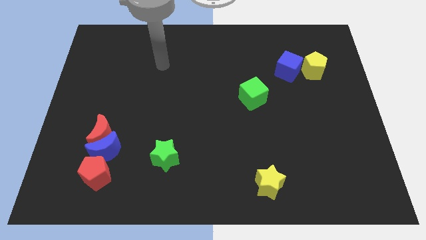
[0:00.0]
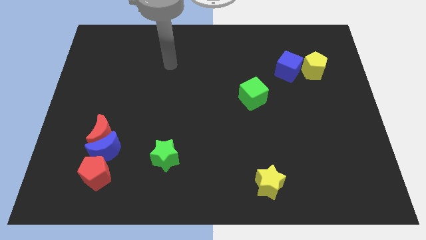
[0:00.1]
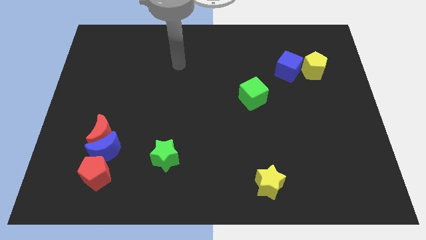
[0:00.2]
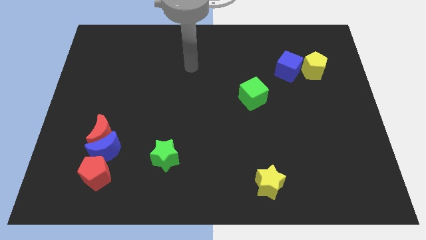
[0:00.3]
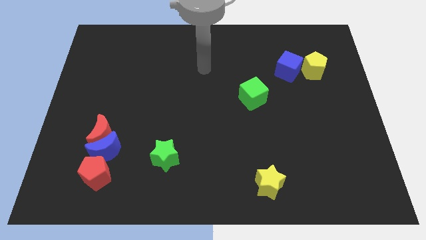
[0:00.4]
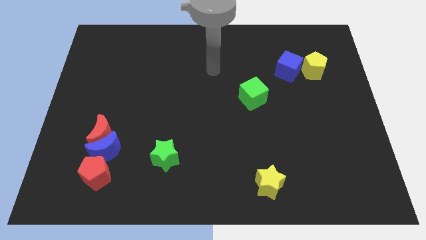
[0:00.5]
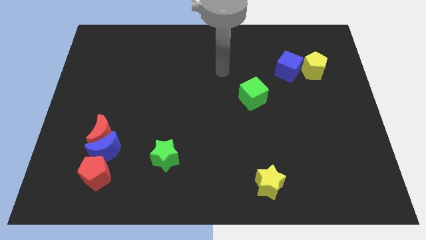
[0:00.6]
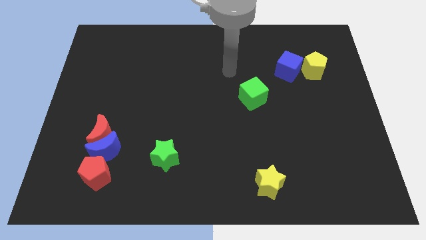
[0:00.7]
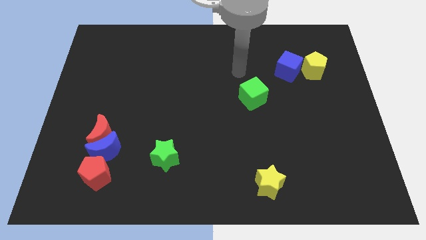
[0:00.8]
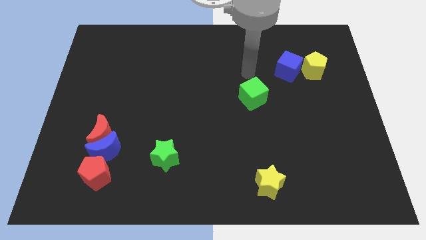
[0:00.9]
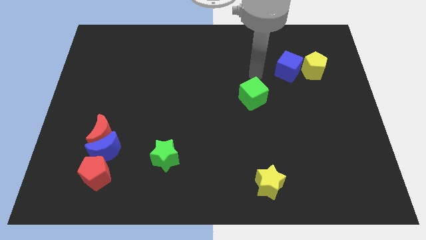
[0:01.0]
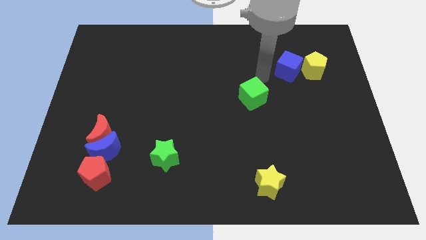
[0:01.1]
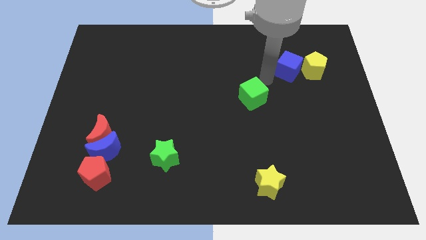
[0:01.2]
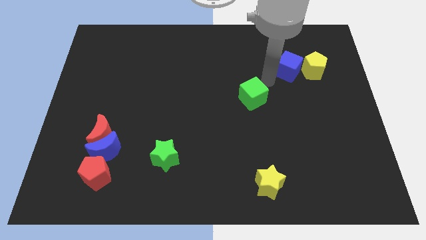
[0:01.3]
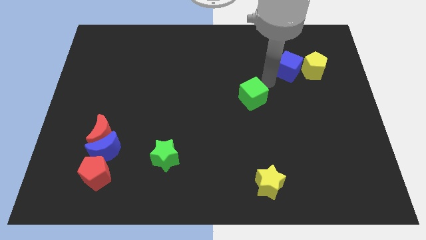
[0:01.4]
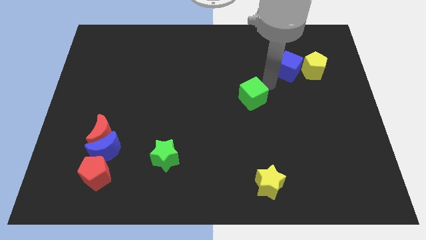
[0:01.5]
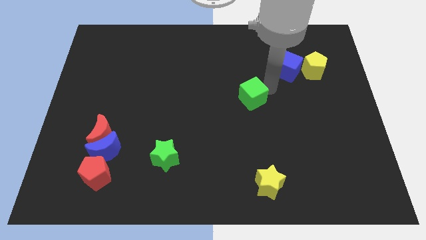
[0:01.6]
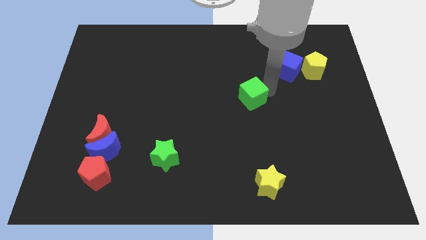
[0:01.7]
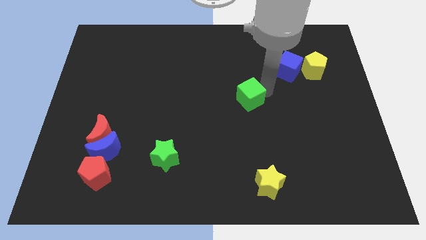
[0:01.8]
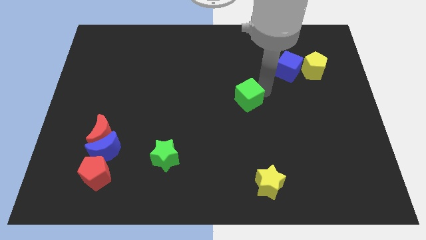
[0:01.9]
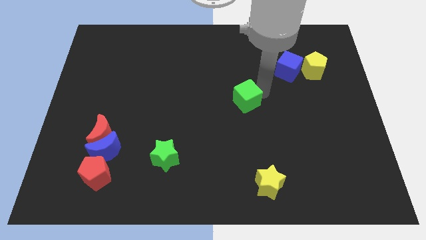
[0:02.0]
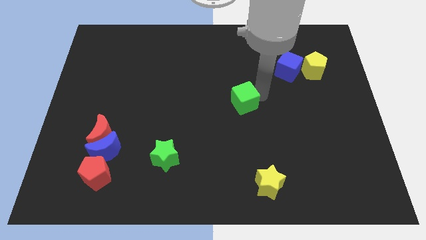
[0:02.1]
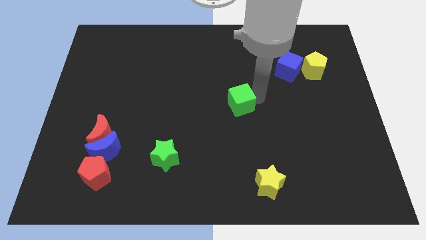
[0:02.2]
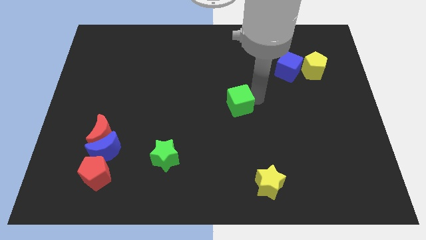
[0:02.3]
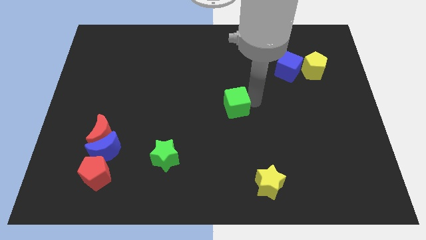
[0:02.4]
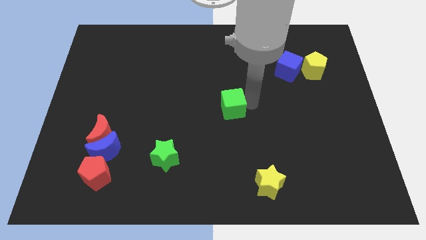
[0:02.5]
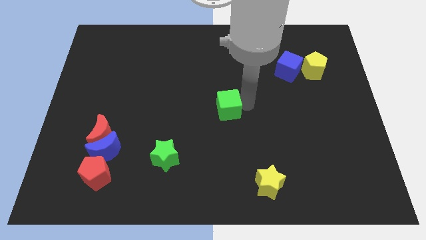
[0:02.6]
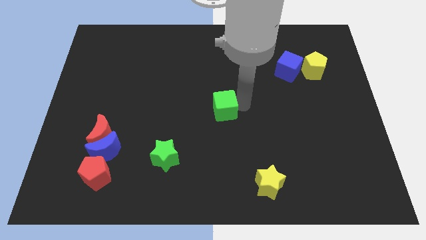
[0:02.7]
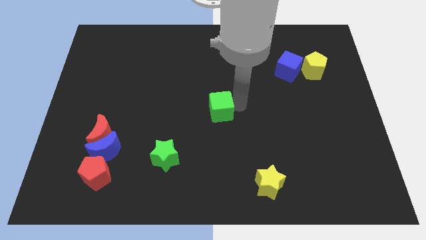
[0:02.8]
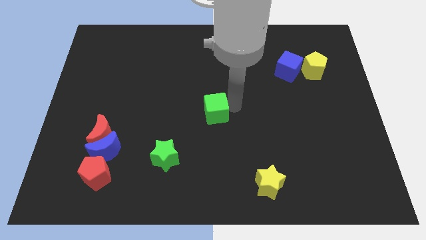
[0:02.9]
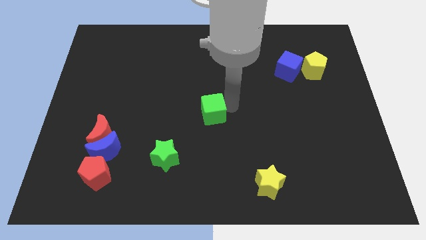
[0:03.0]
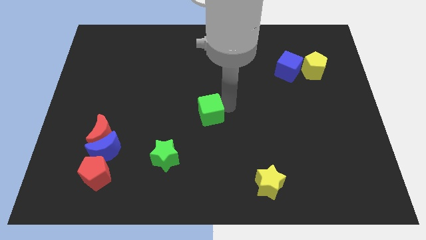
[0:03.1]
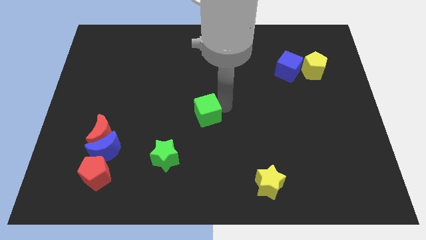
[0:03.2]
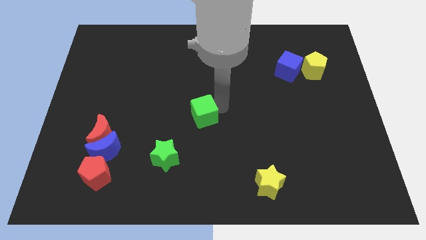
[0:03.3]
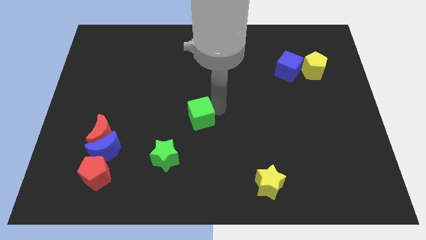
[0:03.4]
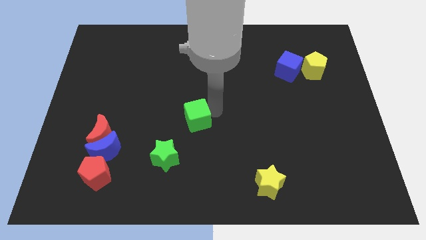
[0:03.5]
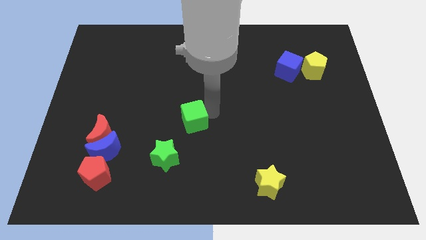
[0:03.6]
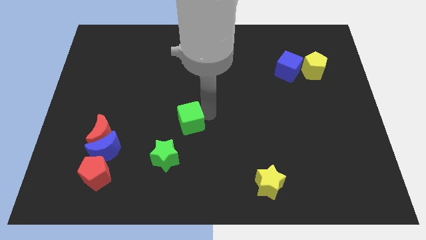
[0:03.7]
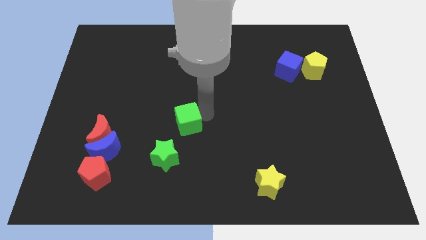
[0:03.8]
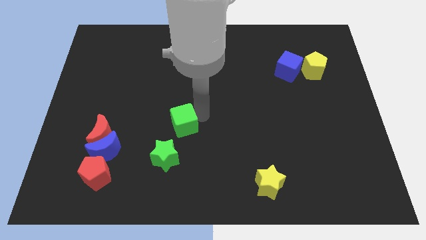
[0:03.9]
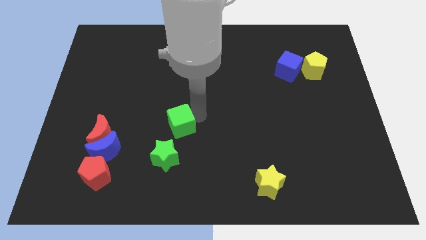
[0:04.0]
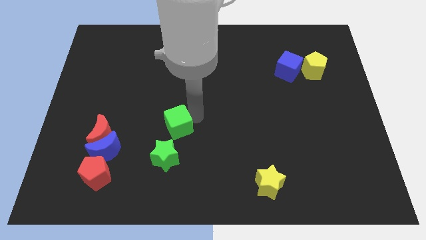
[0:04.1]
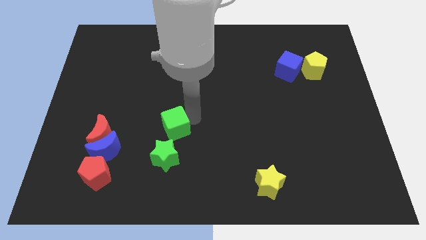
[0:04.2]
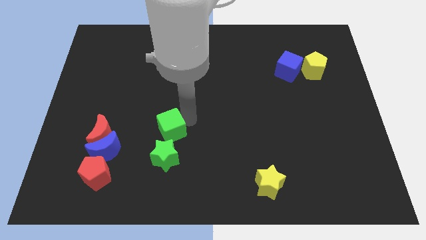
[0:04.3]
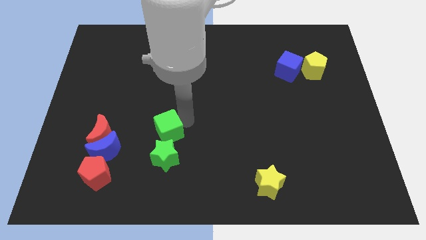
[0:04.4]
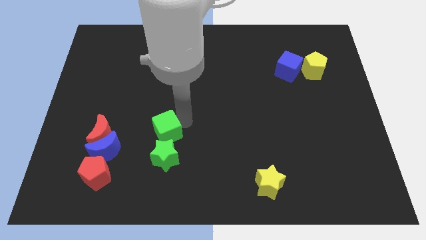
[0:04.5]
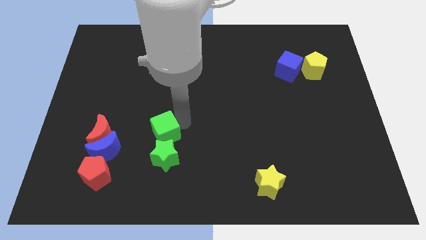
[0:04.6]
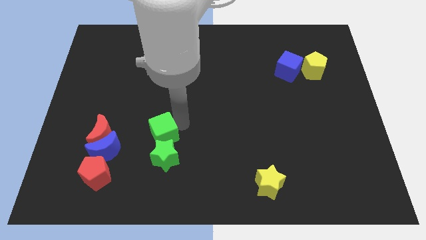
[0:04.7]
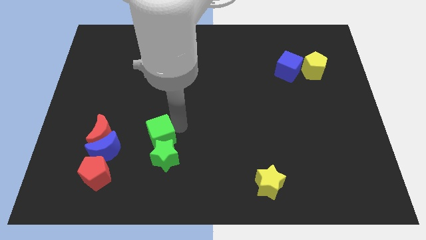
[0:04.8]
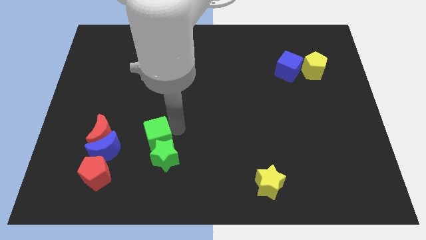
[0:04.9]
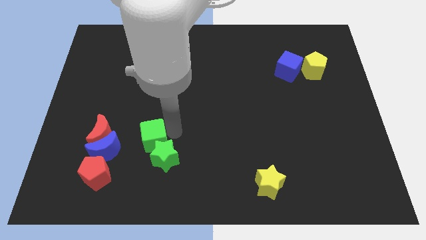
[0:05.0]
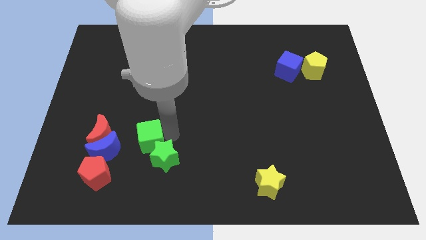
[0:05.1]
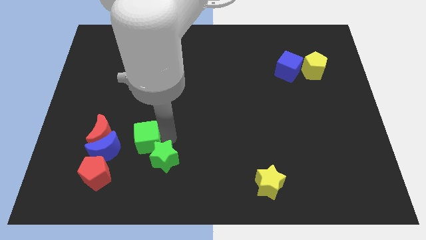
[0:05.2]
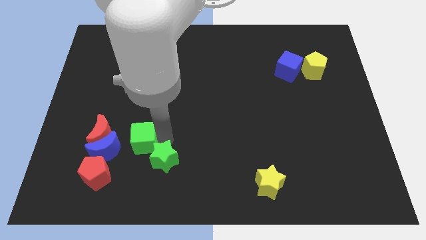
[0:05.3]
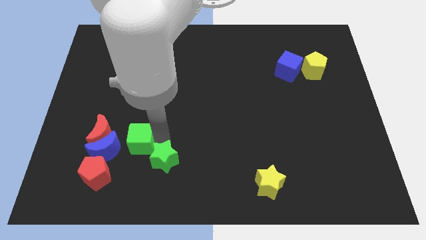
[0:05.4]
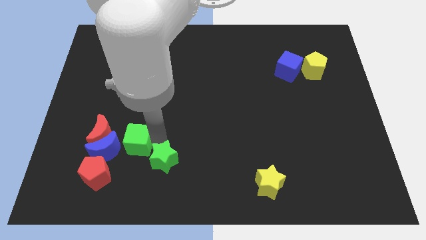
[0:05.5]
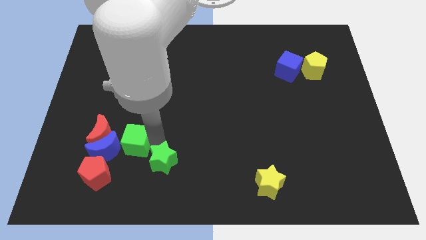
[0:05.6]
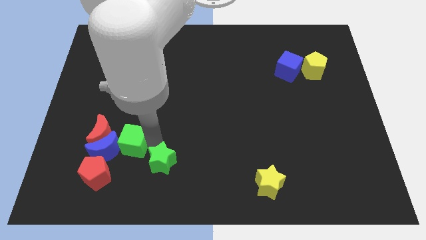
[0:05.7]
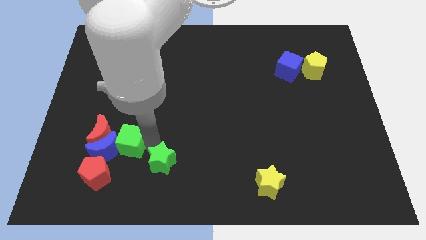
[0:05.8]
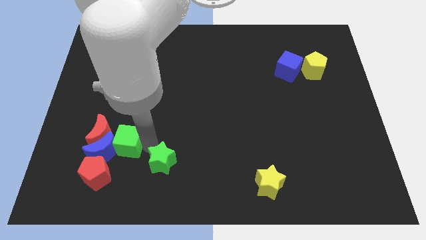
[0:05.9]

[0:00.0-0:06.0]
slide the green cube to the blue moon

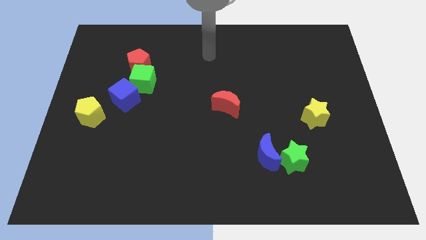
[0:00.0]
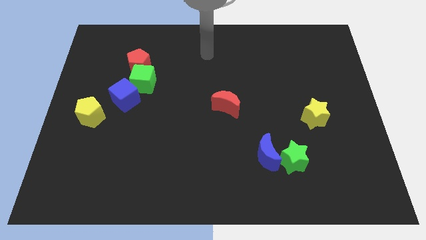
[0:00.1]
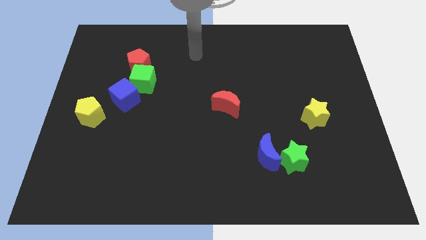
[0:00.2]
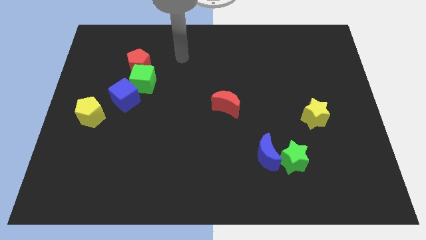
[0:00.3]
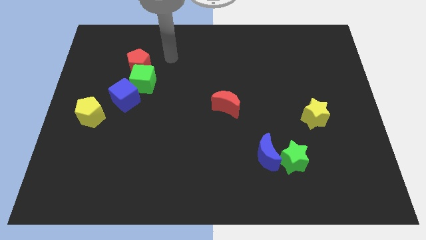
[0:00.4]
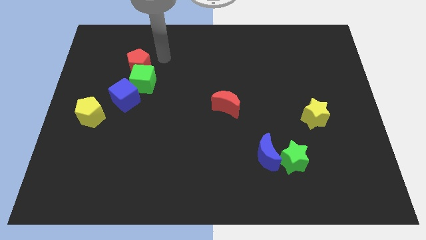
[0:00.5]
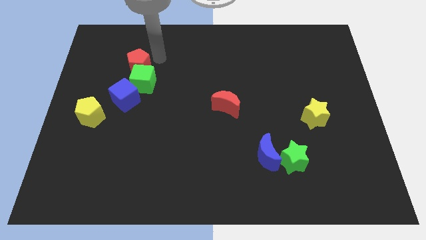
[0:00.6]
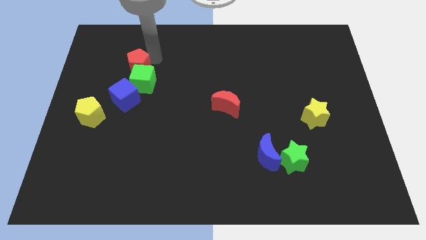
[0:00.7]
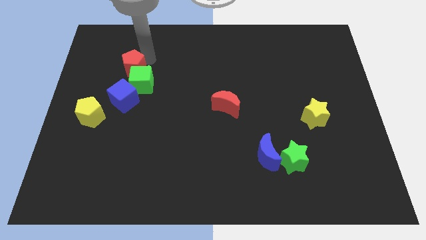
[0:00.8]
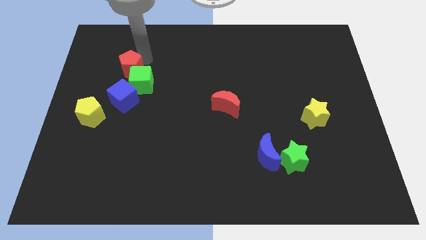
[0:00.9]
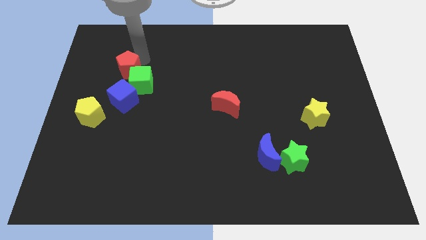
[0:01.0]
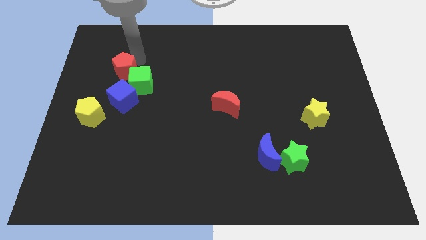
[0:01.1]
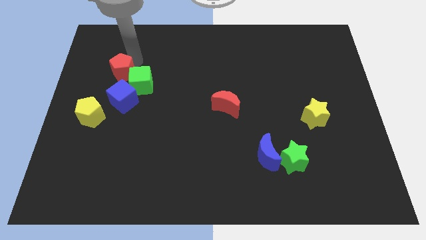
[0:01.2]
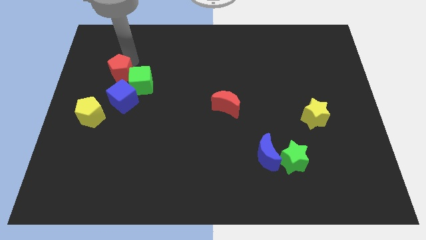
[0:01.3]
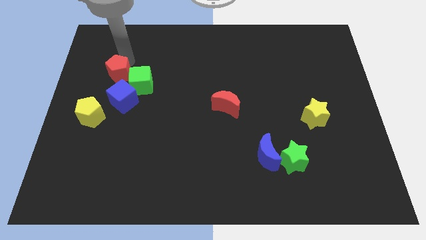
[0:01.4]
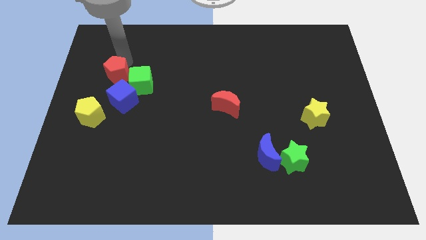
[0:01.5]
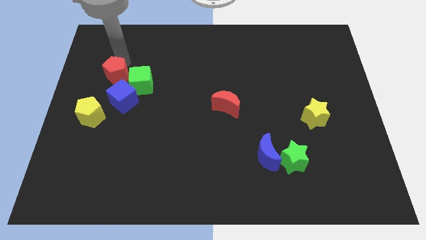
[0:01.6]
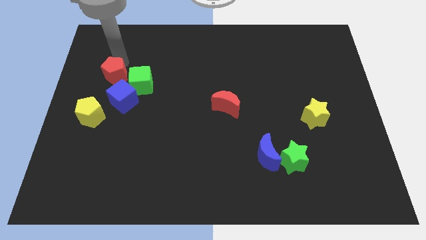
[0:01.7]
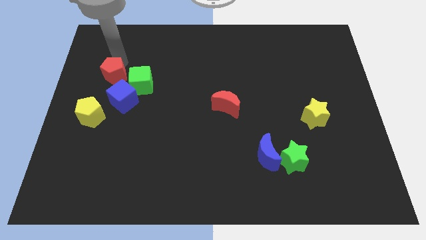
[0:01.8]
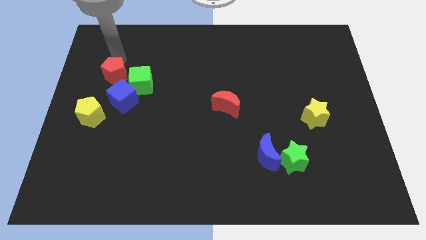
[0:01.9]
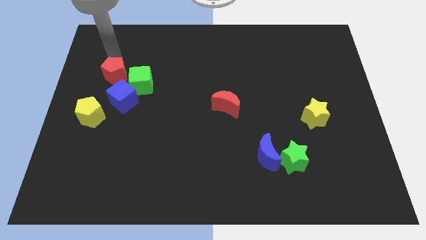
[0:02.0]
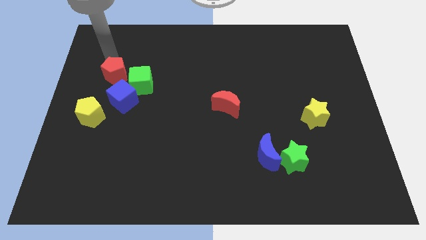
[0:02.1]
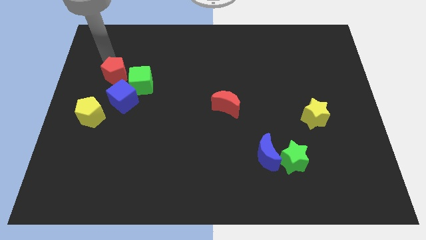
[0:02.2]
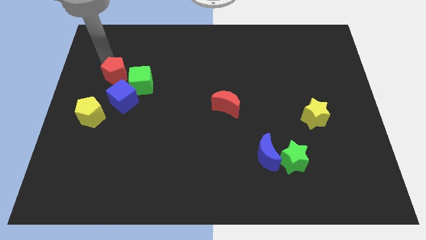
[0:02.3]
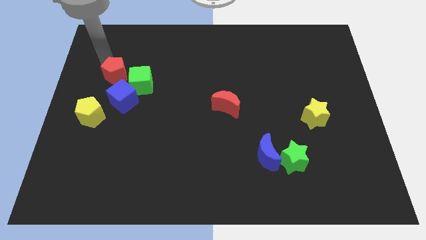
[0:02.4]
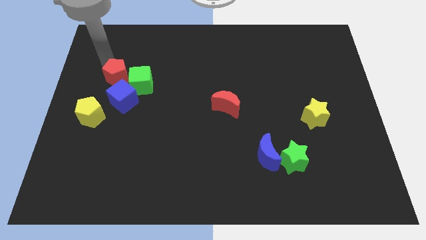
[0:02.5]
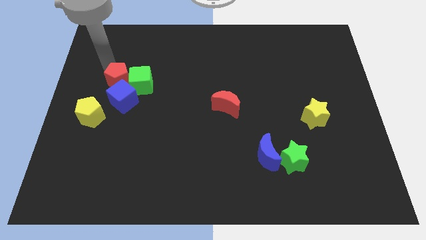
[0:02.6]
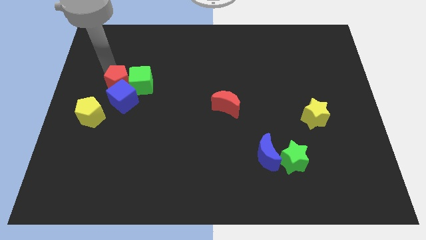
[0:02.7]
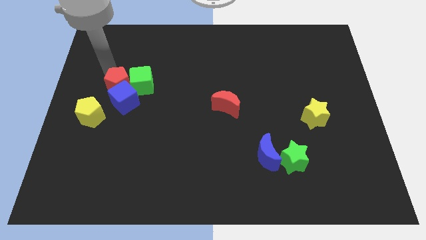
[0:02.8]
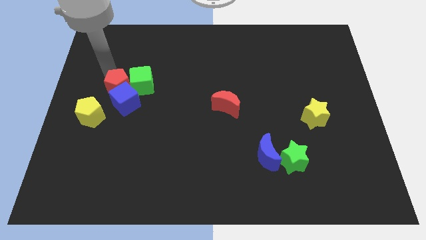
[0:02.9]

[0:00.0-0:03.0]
move the red pentagon towards the blue cube
